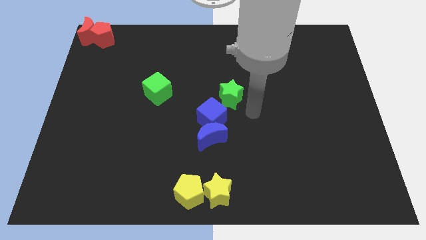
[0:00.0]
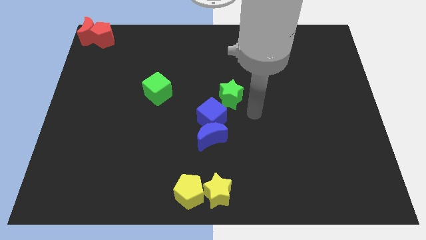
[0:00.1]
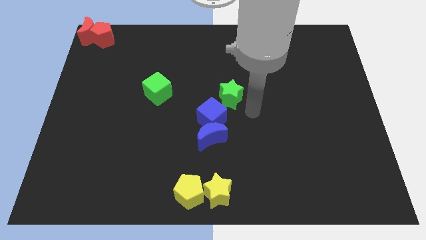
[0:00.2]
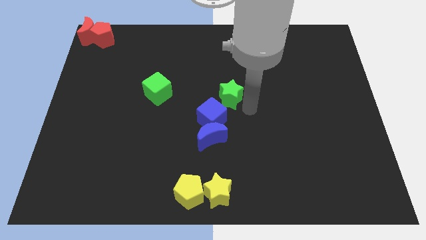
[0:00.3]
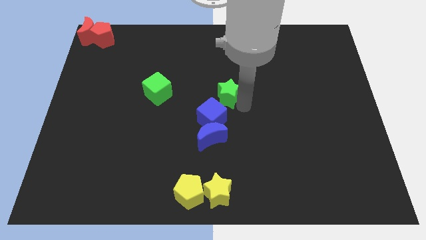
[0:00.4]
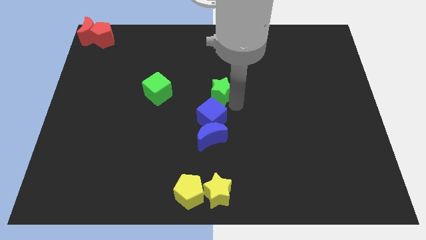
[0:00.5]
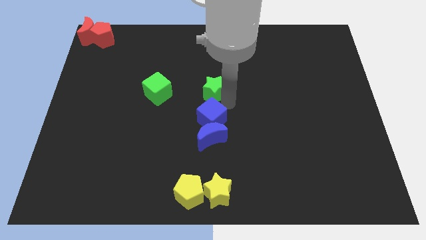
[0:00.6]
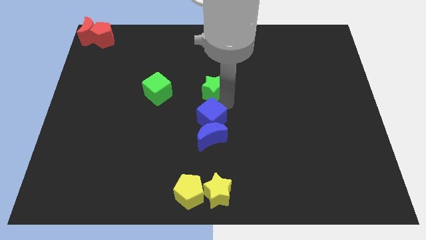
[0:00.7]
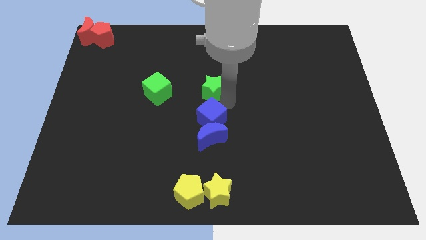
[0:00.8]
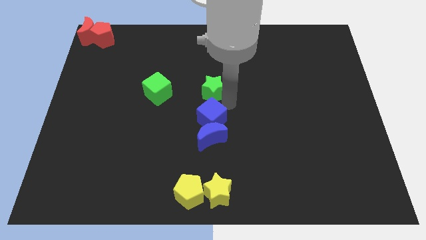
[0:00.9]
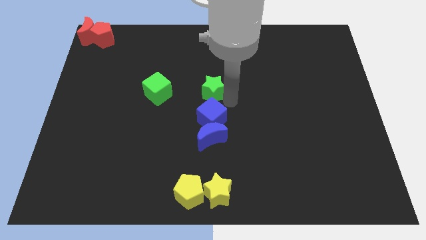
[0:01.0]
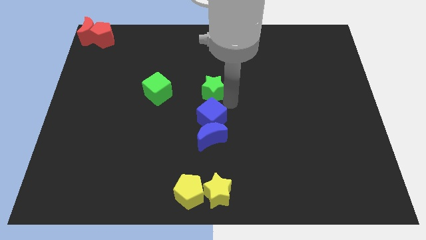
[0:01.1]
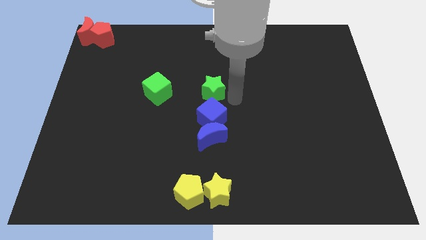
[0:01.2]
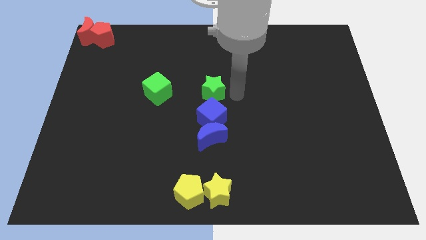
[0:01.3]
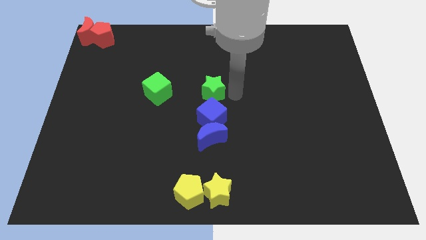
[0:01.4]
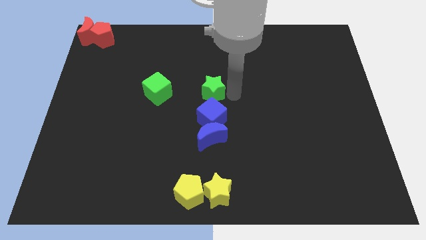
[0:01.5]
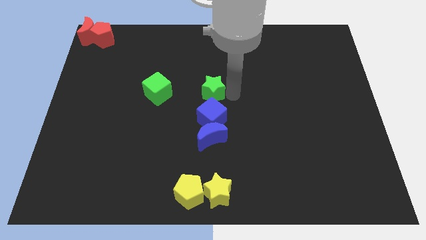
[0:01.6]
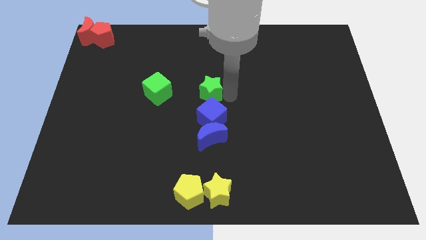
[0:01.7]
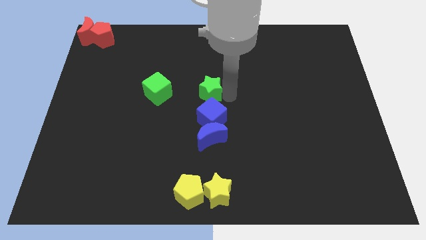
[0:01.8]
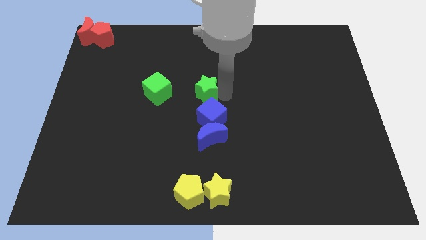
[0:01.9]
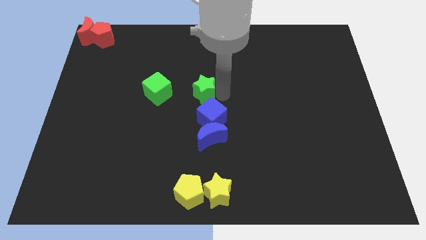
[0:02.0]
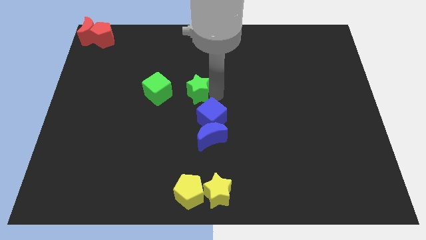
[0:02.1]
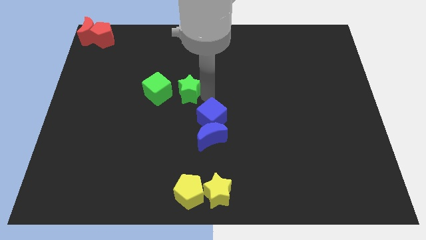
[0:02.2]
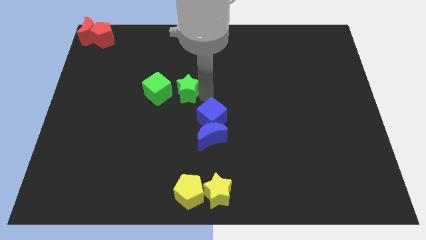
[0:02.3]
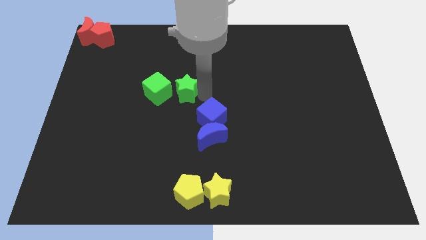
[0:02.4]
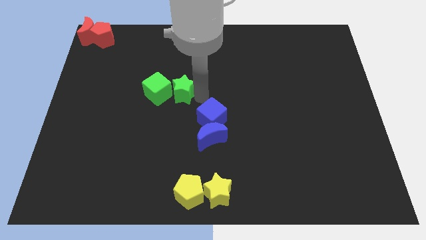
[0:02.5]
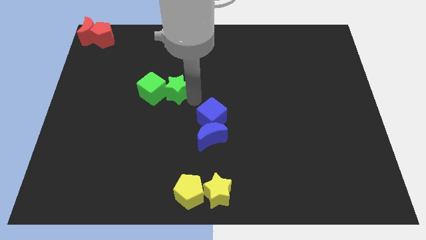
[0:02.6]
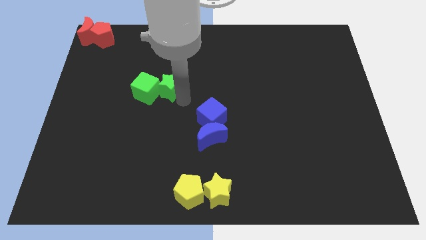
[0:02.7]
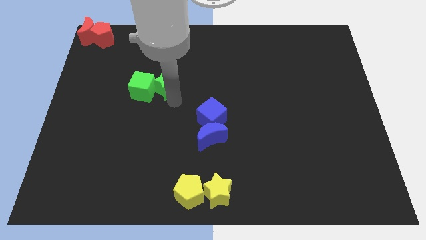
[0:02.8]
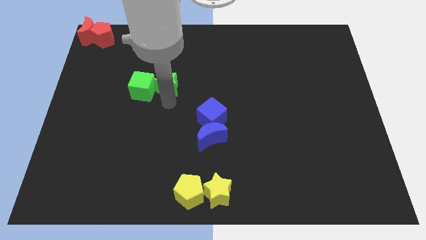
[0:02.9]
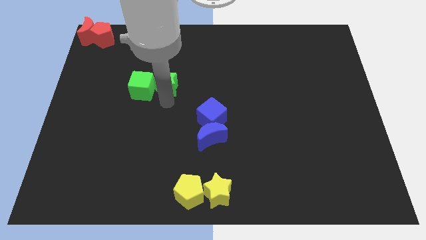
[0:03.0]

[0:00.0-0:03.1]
push green star into green cube

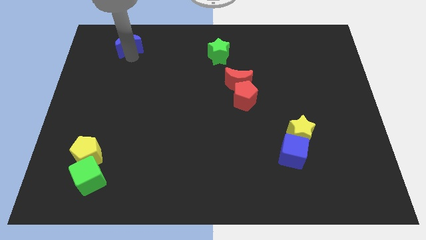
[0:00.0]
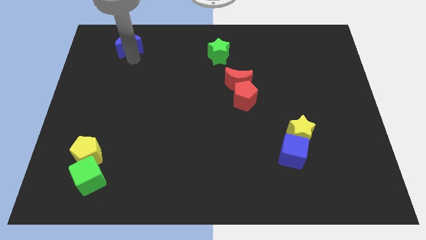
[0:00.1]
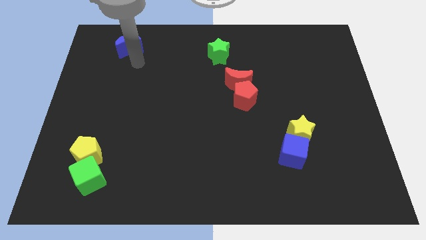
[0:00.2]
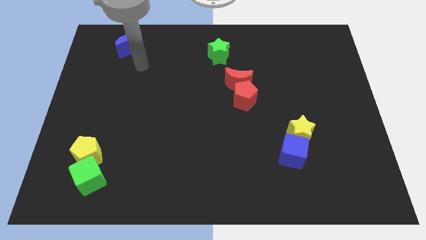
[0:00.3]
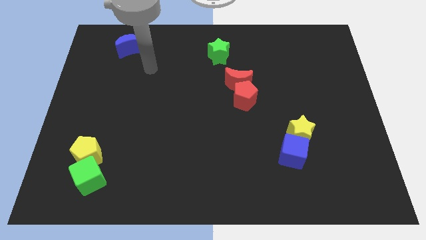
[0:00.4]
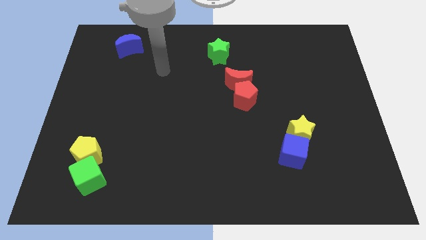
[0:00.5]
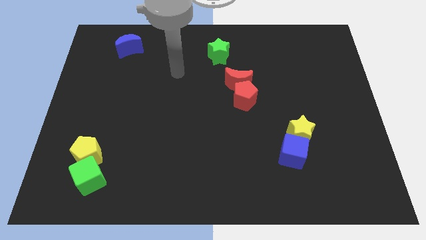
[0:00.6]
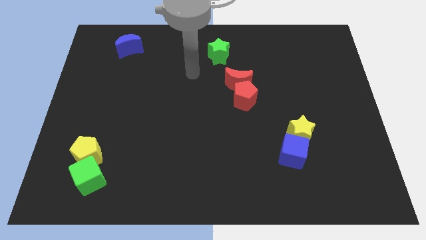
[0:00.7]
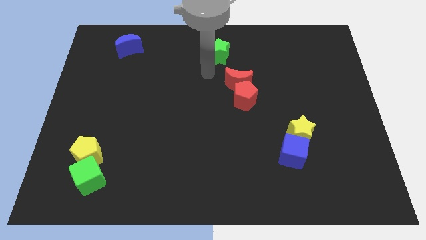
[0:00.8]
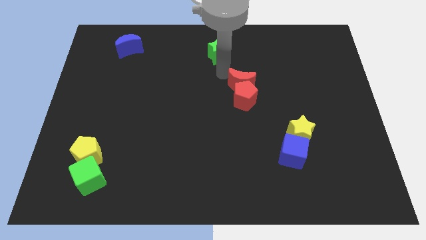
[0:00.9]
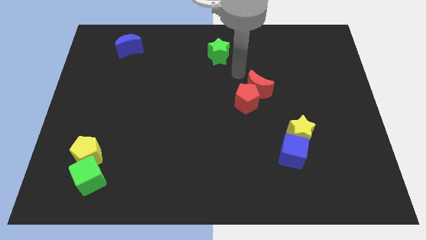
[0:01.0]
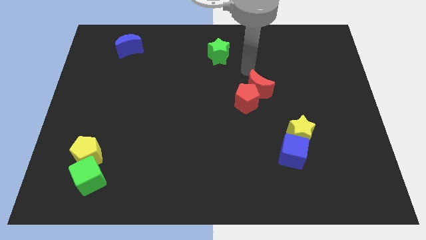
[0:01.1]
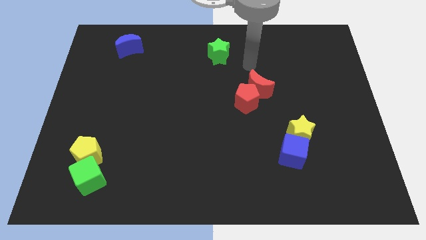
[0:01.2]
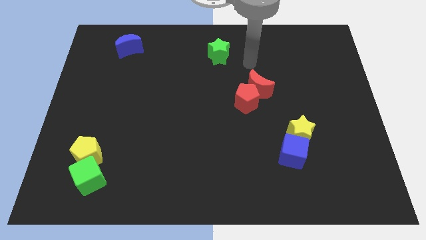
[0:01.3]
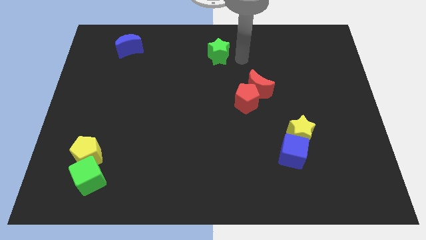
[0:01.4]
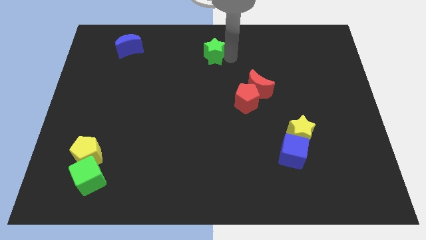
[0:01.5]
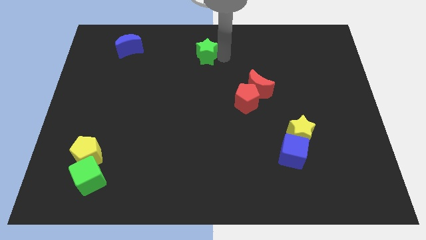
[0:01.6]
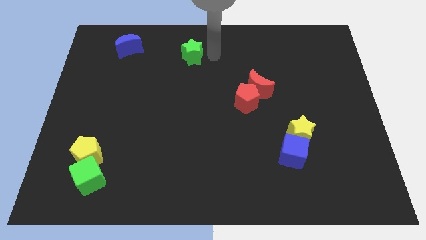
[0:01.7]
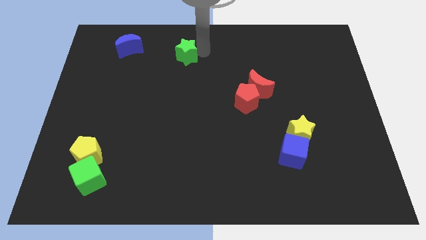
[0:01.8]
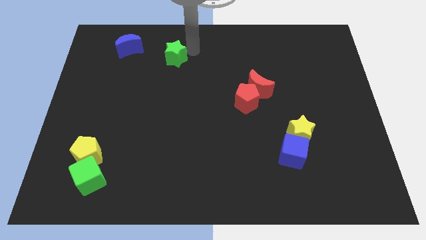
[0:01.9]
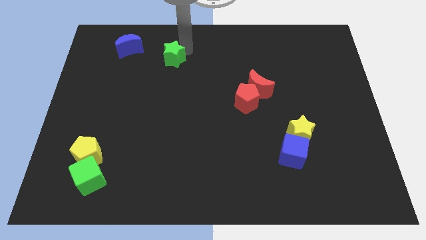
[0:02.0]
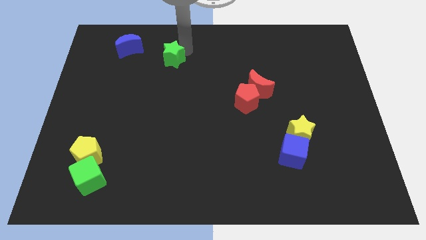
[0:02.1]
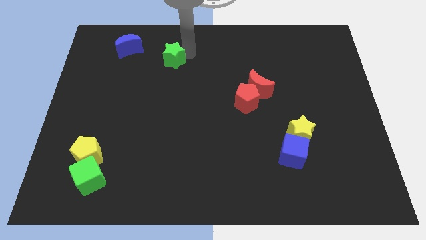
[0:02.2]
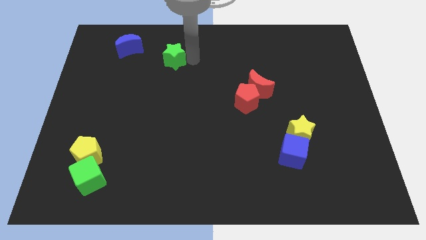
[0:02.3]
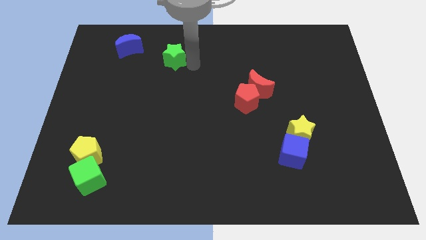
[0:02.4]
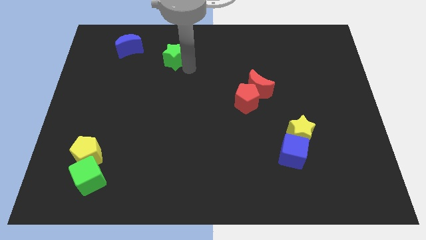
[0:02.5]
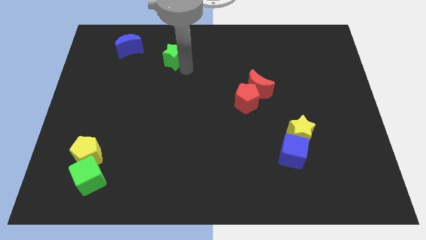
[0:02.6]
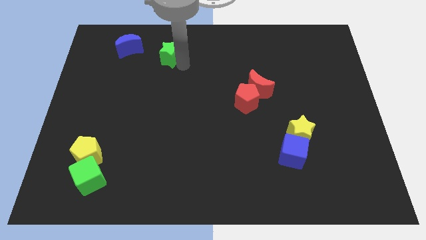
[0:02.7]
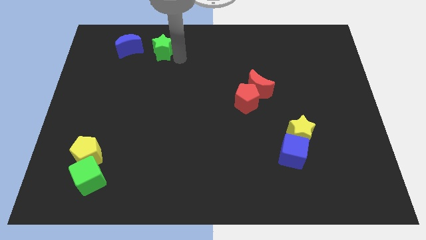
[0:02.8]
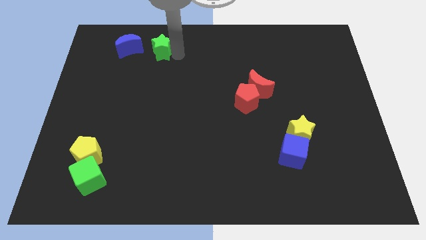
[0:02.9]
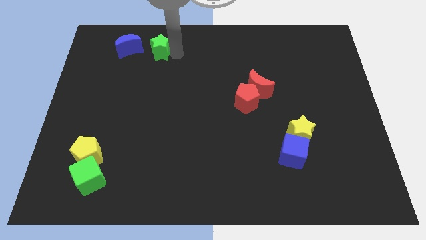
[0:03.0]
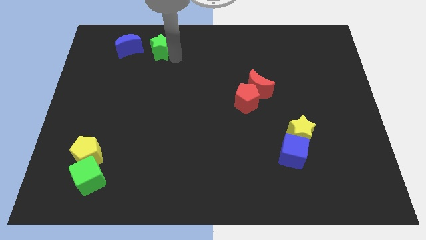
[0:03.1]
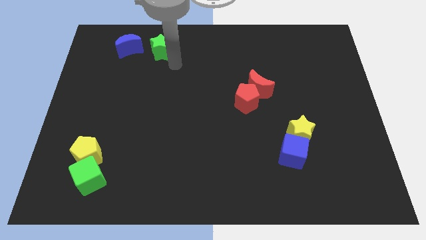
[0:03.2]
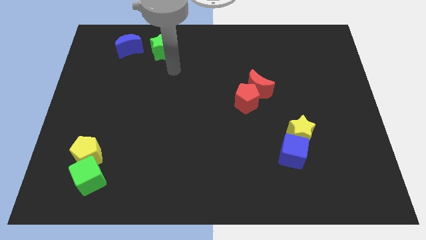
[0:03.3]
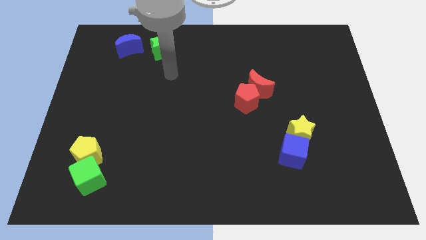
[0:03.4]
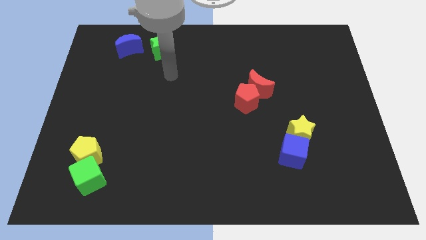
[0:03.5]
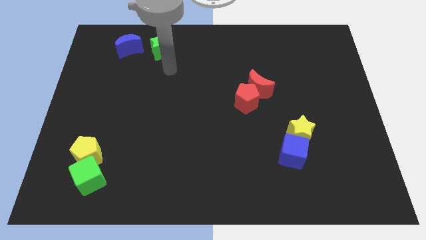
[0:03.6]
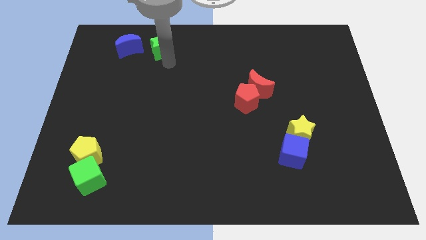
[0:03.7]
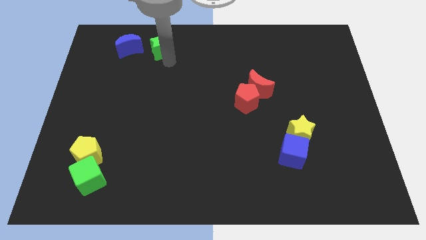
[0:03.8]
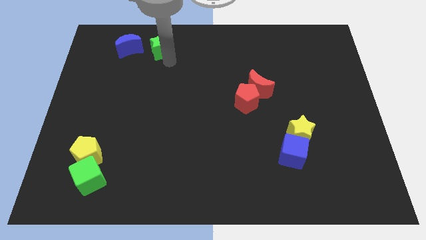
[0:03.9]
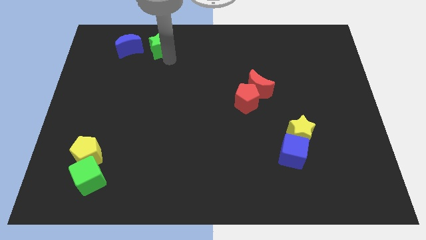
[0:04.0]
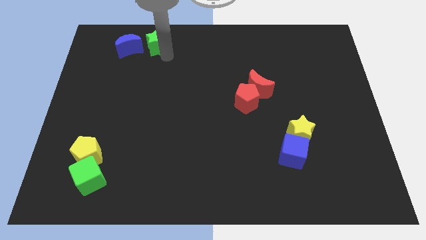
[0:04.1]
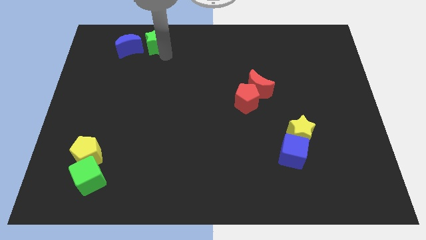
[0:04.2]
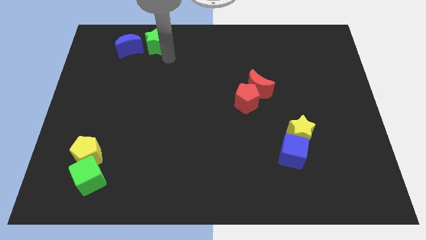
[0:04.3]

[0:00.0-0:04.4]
push the green star to the right side of the blue cube

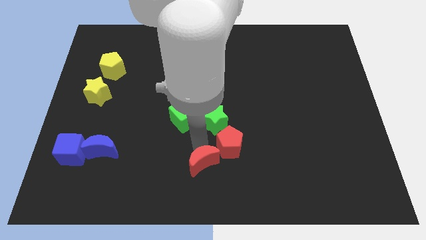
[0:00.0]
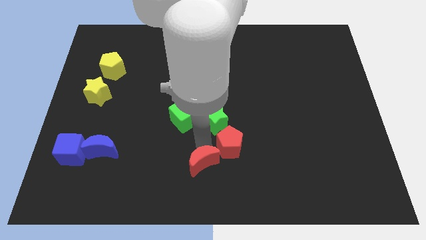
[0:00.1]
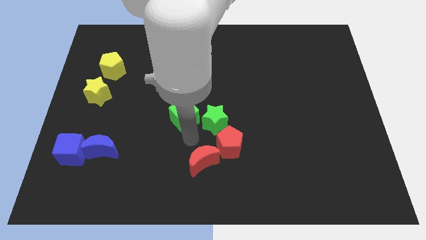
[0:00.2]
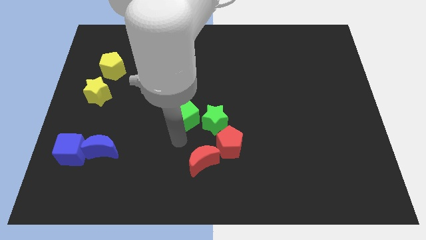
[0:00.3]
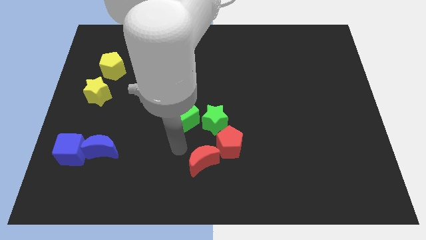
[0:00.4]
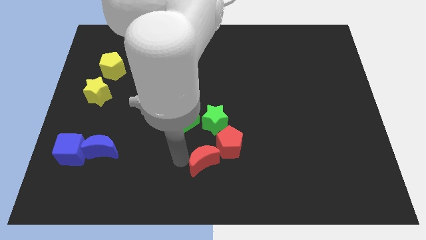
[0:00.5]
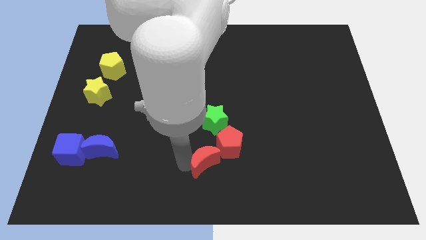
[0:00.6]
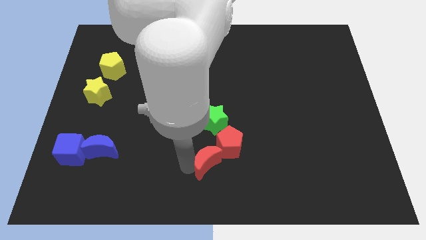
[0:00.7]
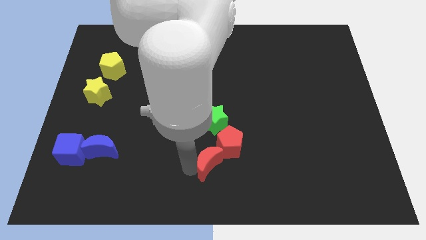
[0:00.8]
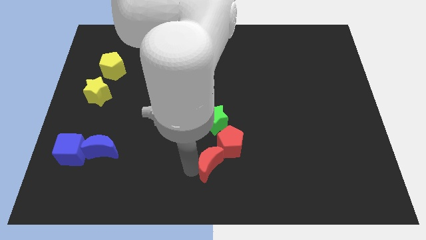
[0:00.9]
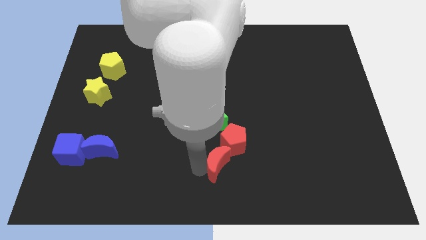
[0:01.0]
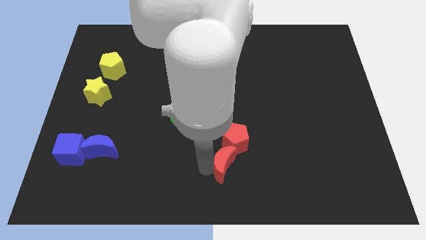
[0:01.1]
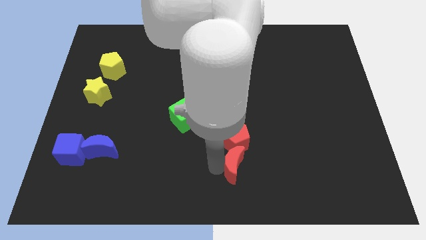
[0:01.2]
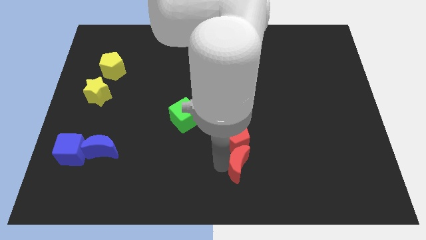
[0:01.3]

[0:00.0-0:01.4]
push the red moon below the red pentagon
